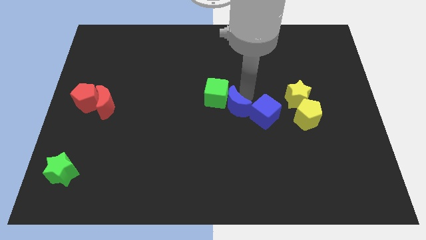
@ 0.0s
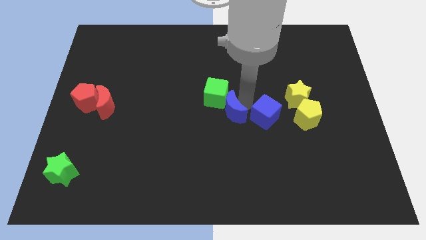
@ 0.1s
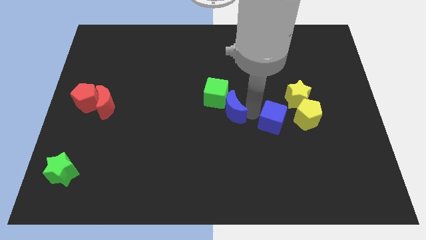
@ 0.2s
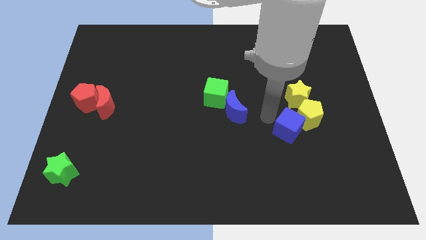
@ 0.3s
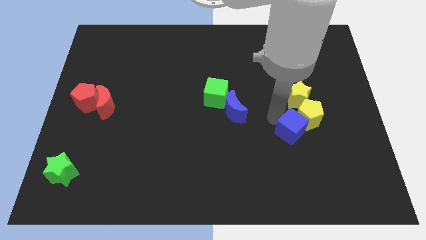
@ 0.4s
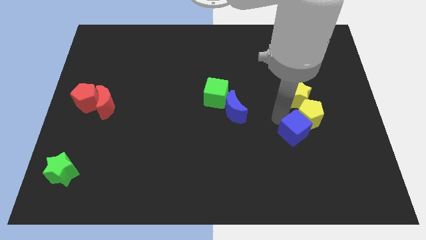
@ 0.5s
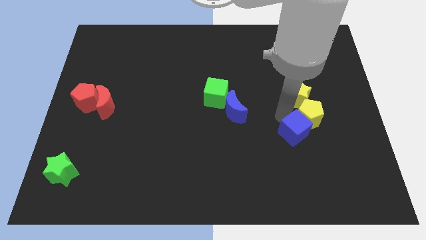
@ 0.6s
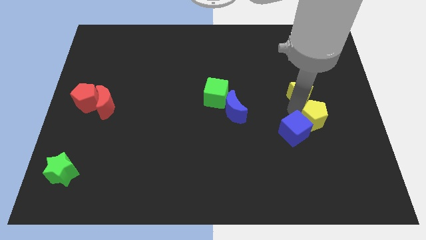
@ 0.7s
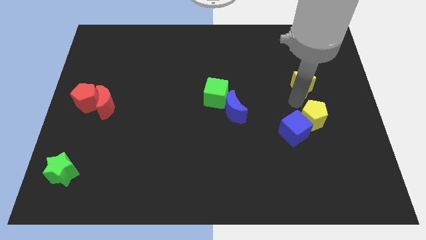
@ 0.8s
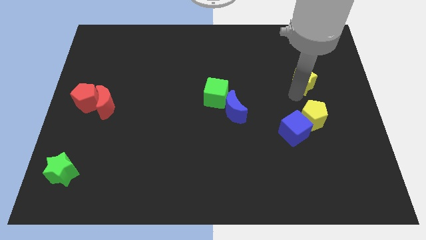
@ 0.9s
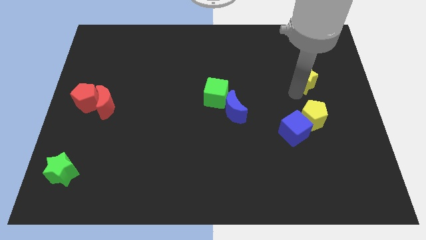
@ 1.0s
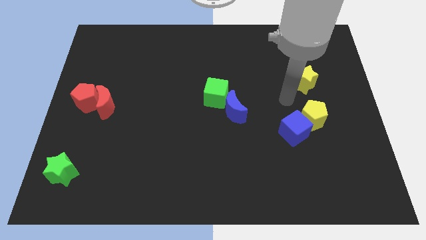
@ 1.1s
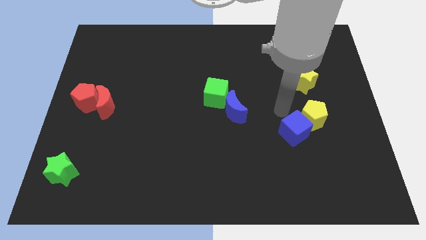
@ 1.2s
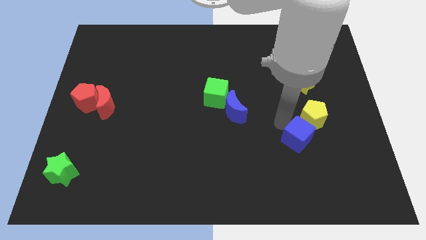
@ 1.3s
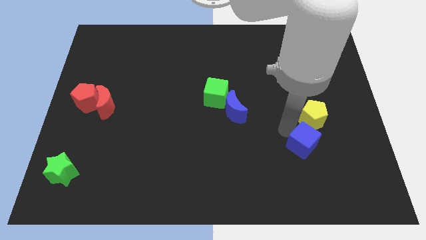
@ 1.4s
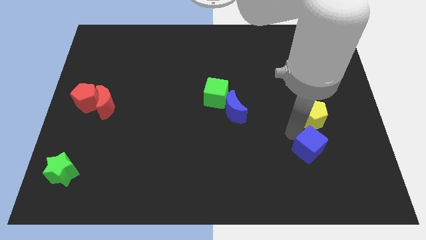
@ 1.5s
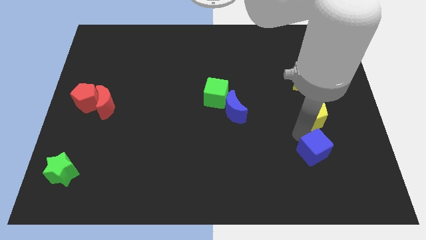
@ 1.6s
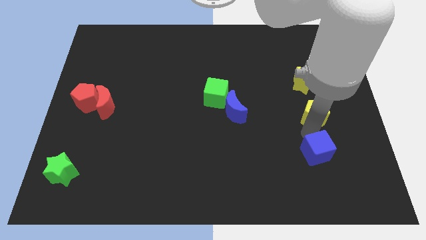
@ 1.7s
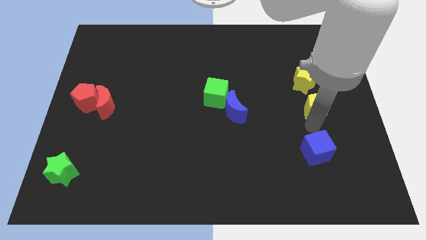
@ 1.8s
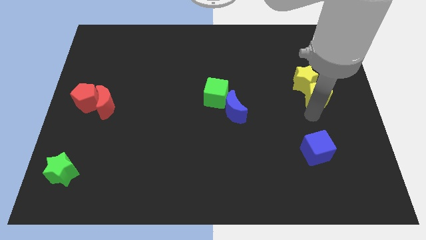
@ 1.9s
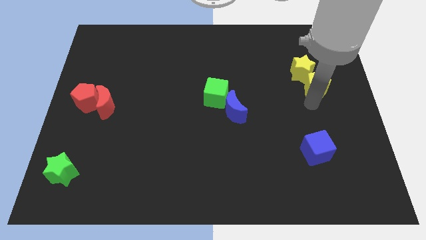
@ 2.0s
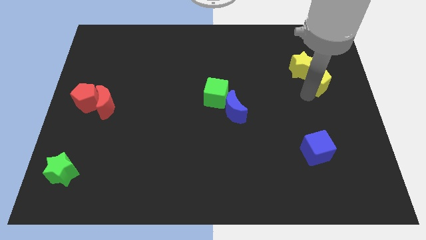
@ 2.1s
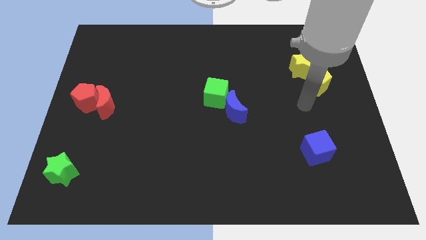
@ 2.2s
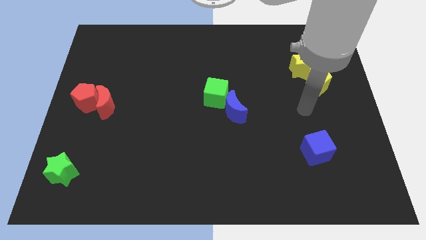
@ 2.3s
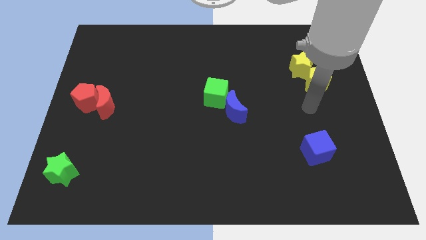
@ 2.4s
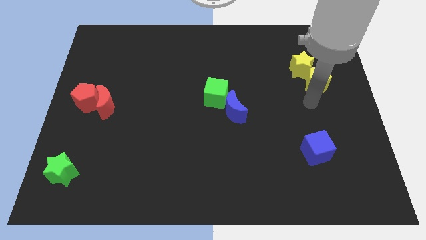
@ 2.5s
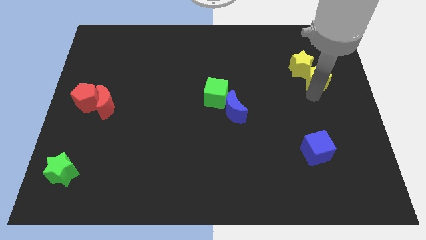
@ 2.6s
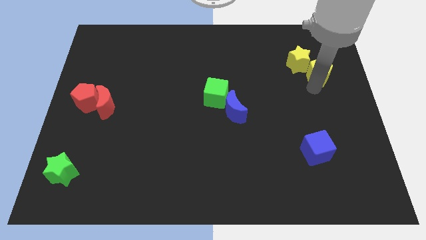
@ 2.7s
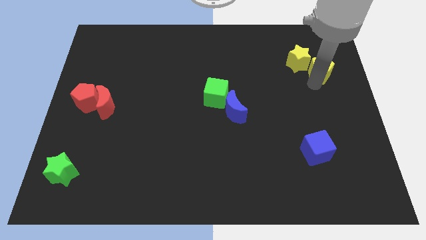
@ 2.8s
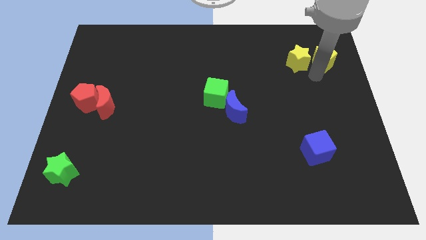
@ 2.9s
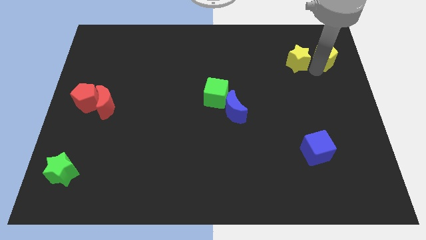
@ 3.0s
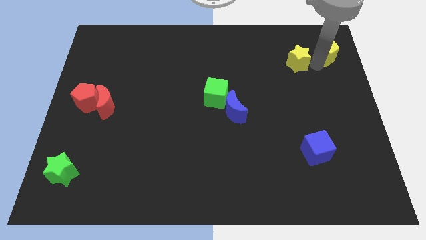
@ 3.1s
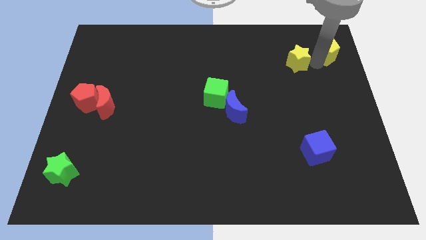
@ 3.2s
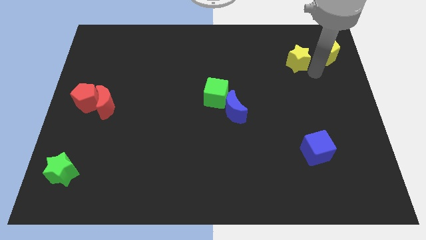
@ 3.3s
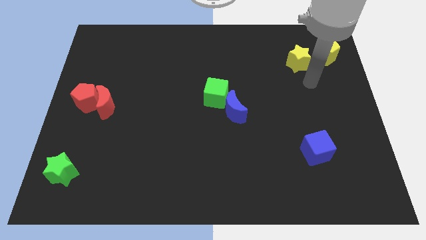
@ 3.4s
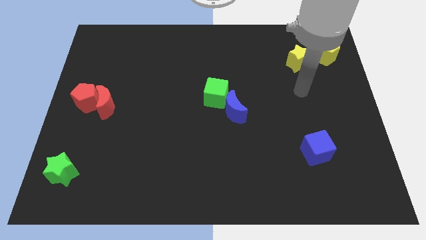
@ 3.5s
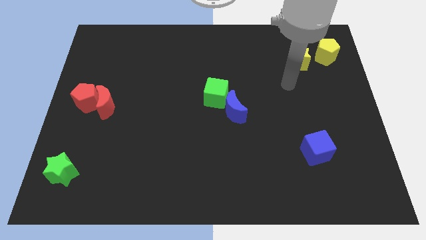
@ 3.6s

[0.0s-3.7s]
separate the blocks

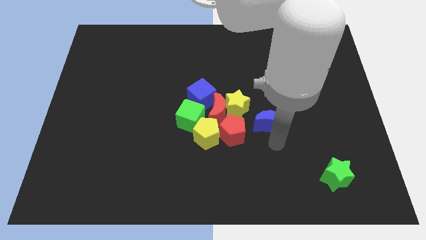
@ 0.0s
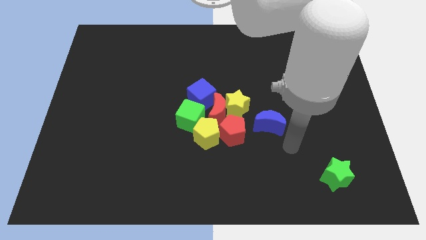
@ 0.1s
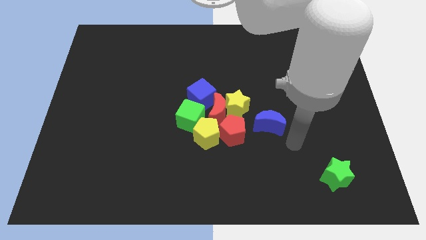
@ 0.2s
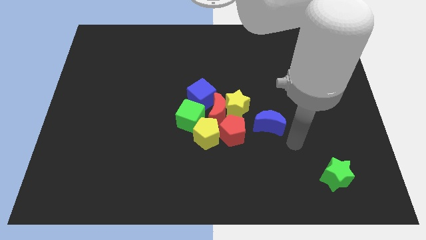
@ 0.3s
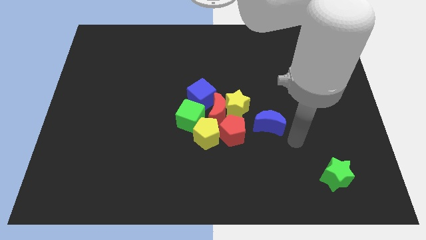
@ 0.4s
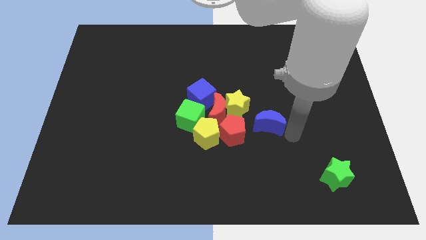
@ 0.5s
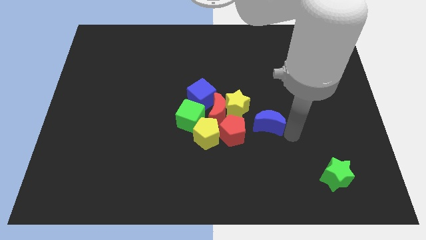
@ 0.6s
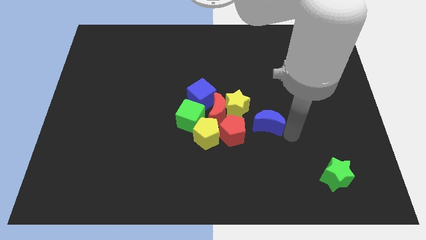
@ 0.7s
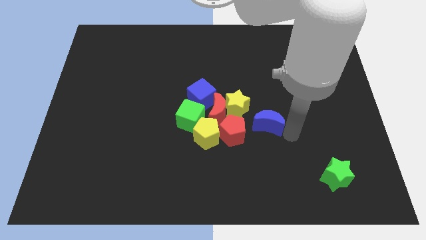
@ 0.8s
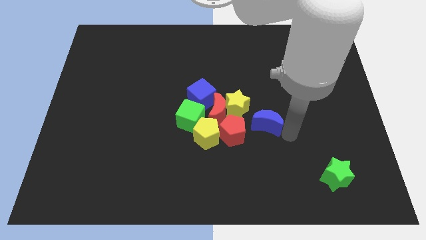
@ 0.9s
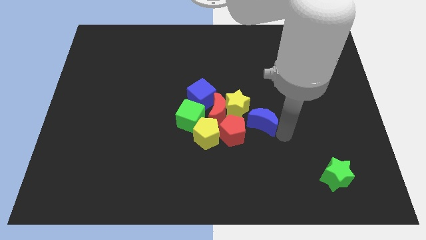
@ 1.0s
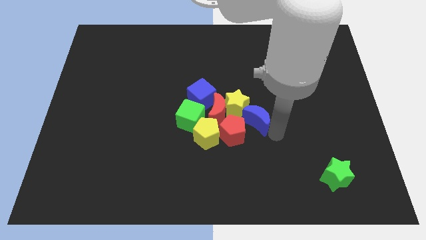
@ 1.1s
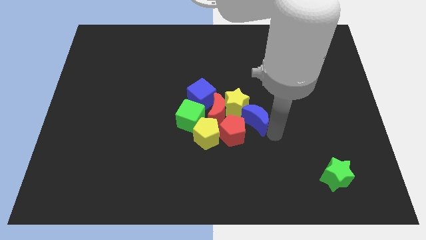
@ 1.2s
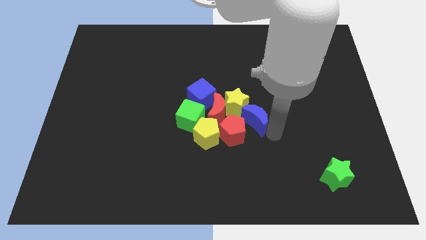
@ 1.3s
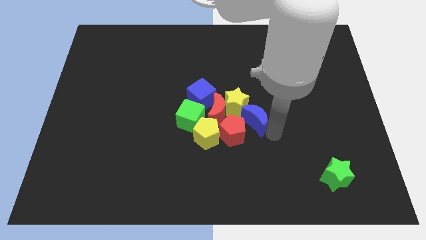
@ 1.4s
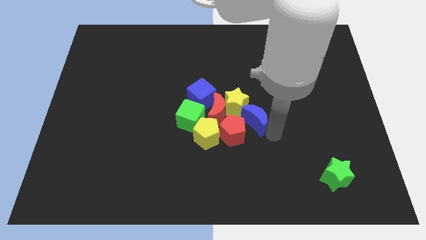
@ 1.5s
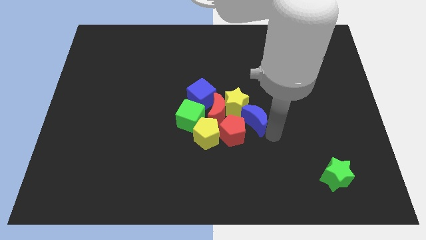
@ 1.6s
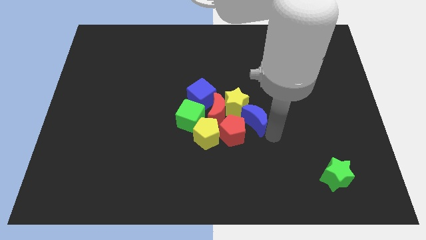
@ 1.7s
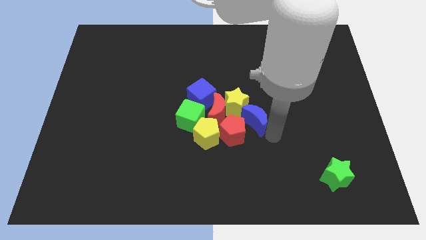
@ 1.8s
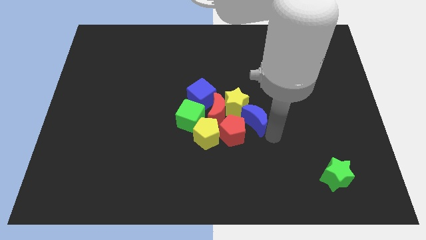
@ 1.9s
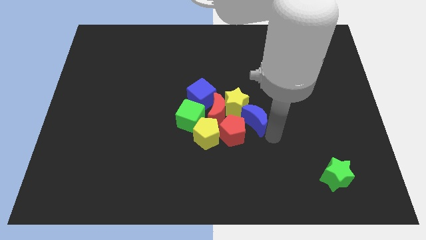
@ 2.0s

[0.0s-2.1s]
move the blue crescent into the yellow star

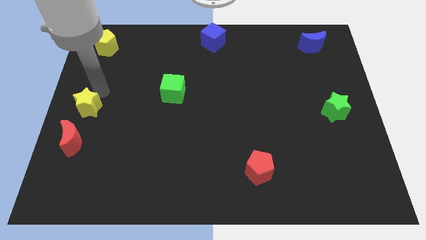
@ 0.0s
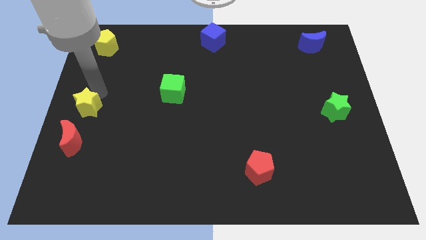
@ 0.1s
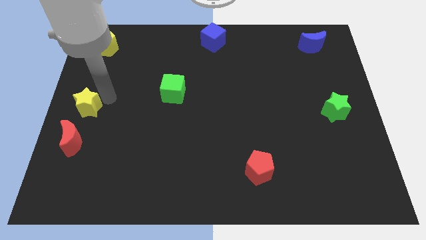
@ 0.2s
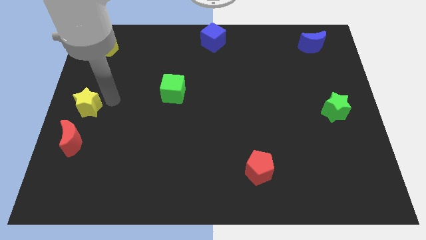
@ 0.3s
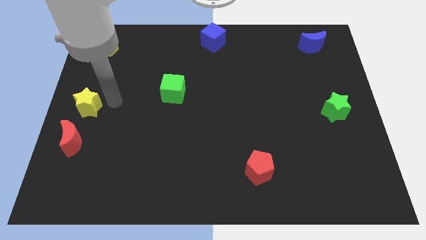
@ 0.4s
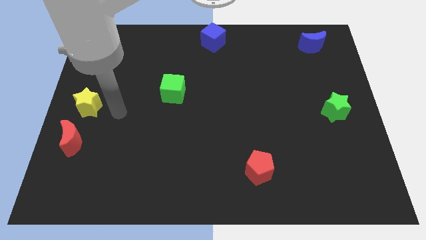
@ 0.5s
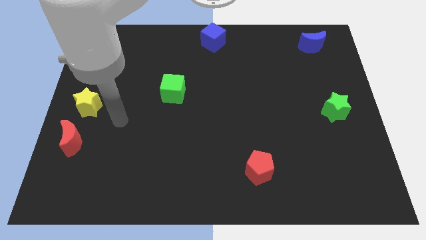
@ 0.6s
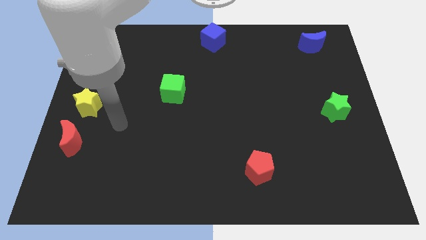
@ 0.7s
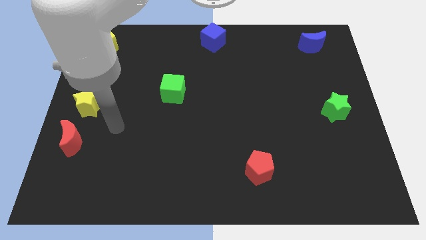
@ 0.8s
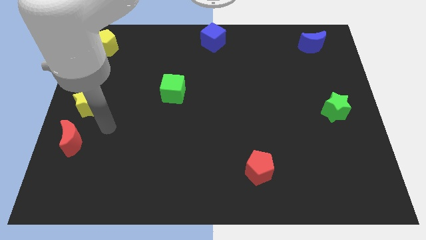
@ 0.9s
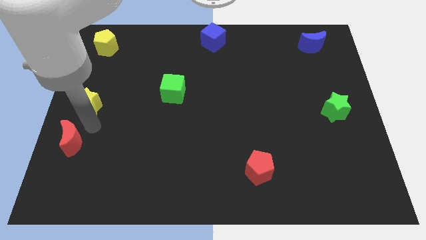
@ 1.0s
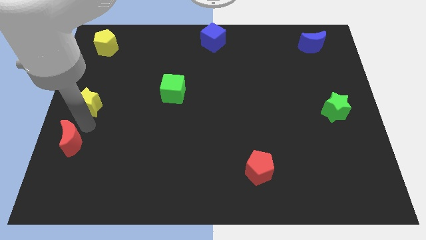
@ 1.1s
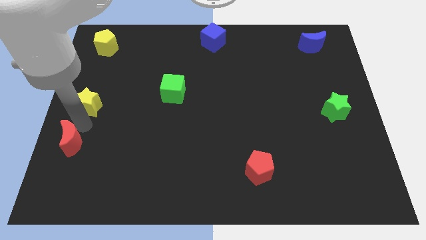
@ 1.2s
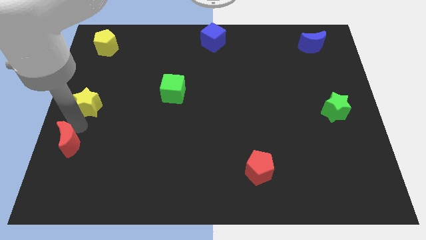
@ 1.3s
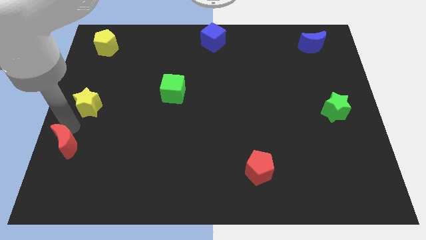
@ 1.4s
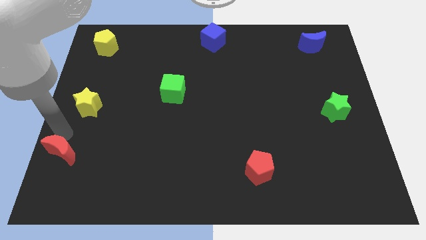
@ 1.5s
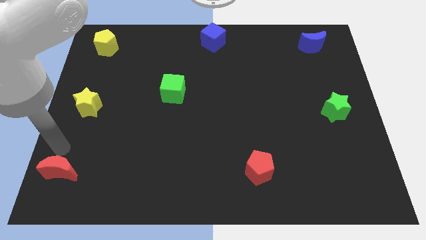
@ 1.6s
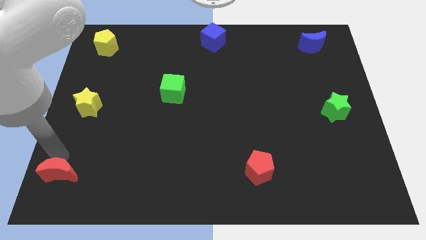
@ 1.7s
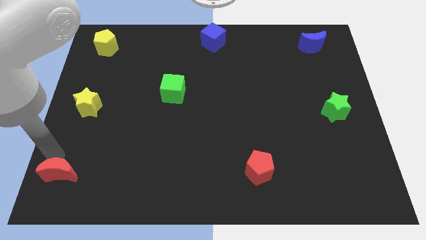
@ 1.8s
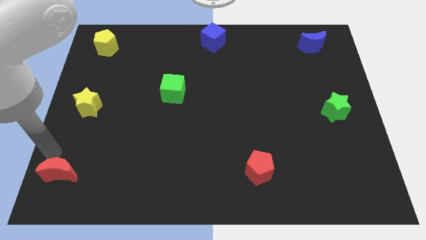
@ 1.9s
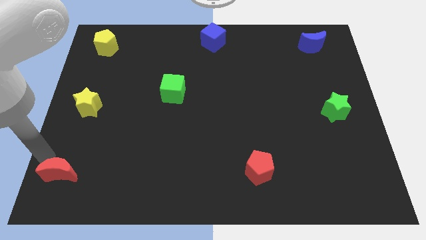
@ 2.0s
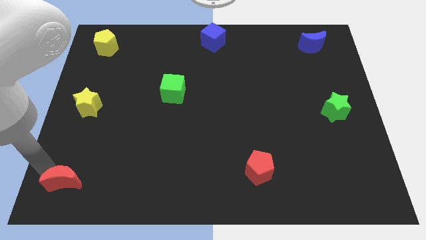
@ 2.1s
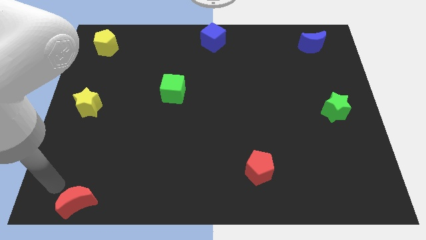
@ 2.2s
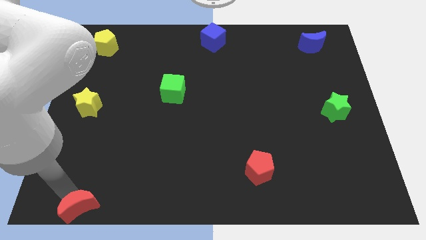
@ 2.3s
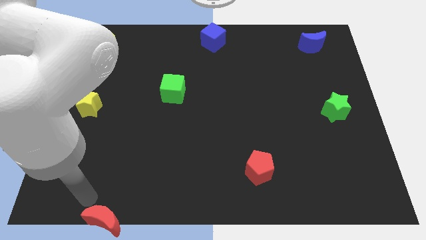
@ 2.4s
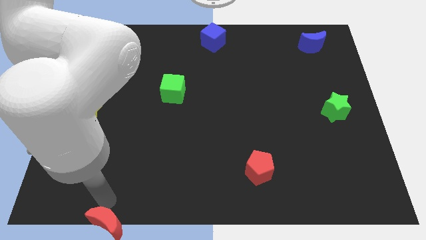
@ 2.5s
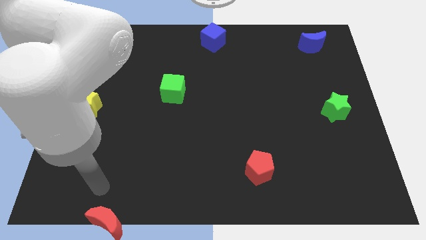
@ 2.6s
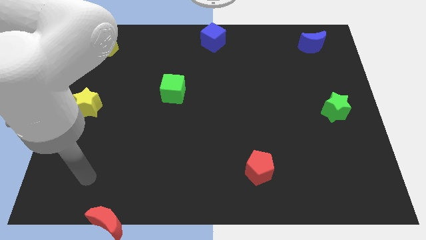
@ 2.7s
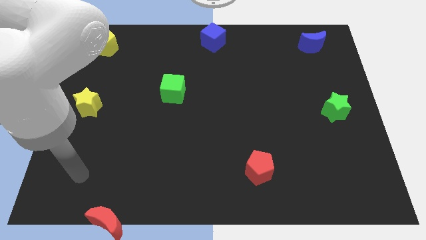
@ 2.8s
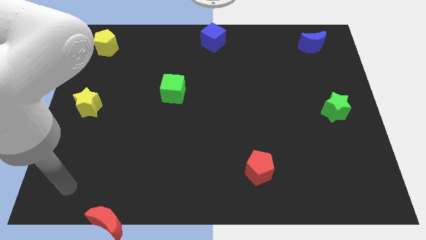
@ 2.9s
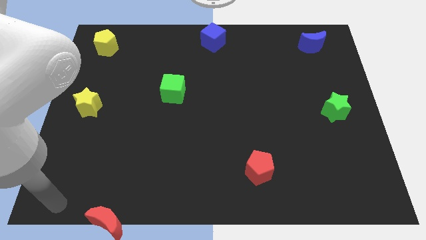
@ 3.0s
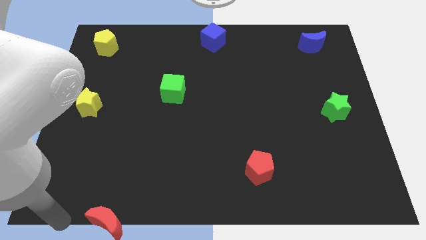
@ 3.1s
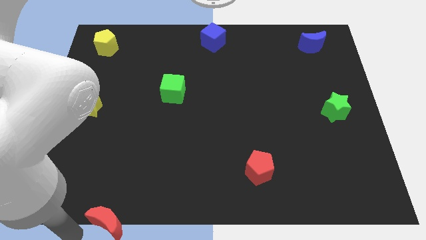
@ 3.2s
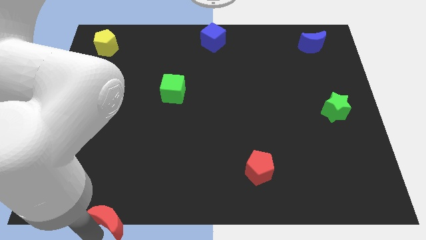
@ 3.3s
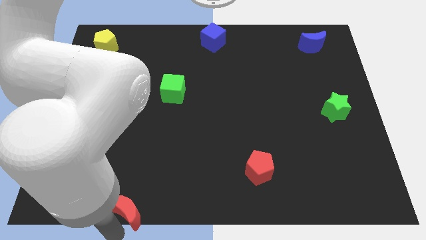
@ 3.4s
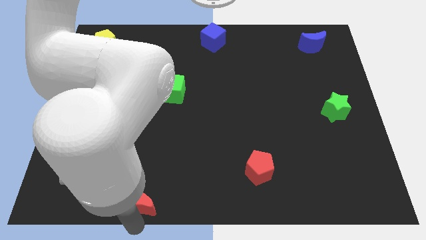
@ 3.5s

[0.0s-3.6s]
move red moon to the bottom side of the board
